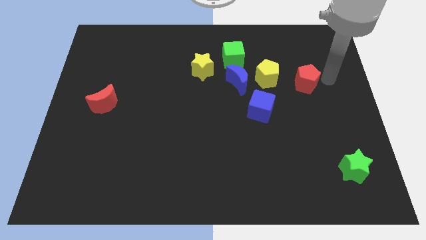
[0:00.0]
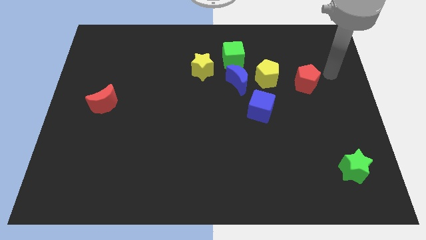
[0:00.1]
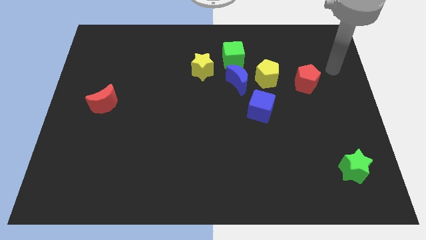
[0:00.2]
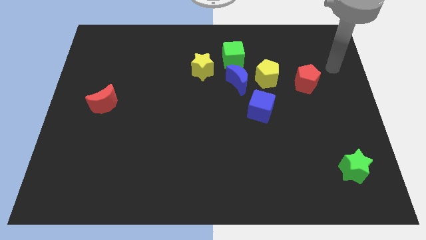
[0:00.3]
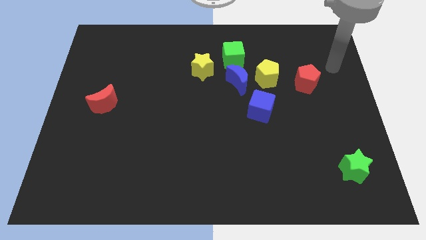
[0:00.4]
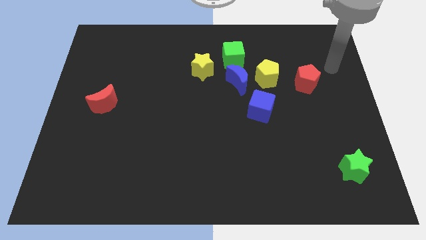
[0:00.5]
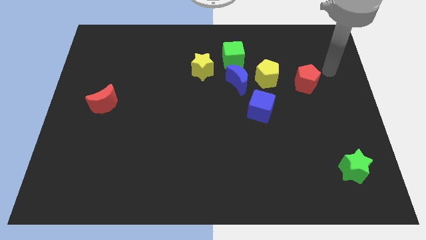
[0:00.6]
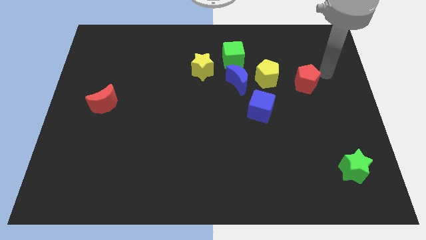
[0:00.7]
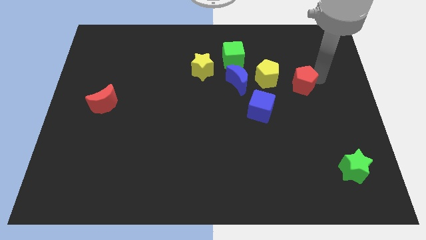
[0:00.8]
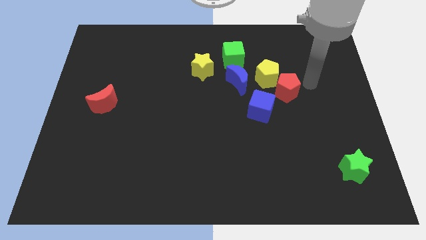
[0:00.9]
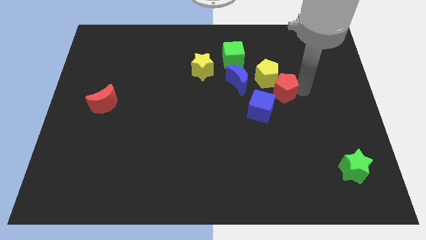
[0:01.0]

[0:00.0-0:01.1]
push the red pentagon into the right side of the yellow pentagon

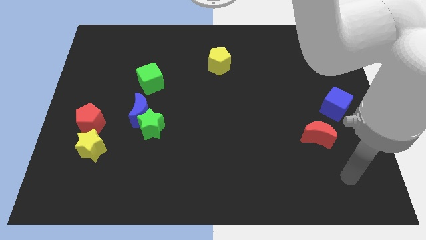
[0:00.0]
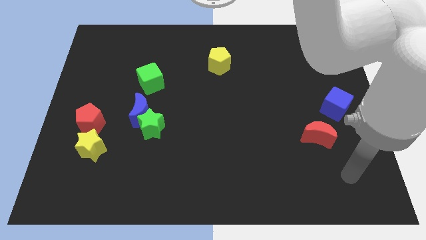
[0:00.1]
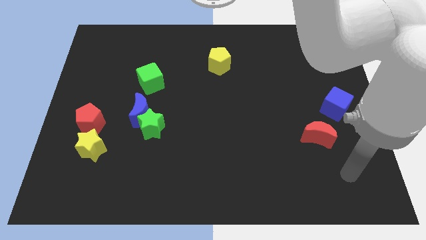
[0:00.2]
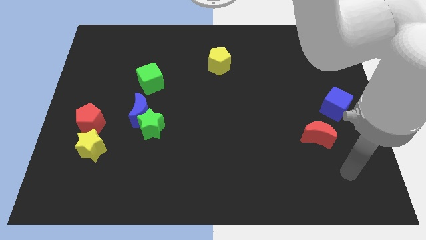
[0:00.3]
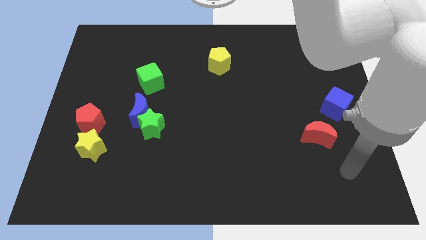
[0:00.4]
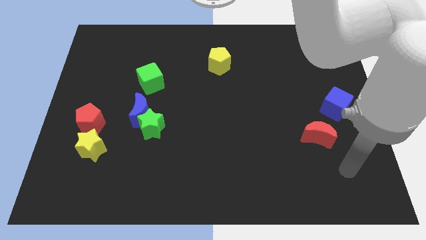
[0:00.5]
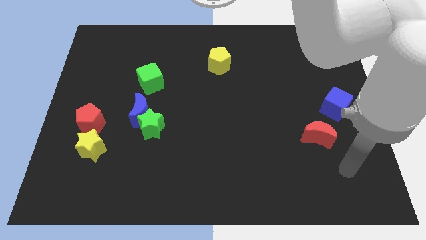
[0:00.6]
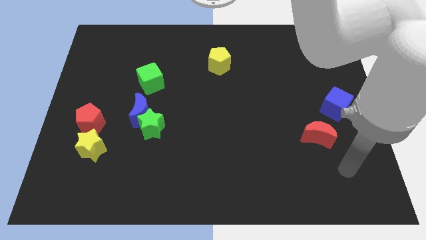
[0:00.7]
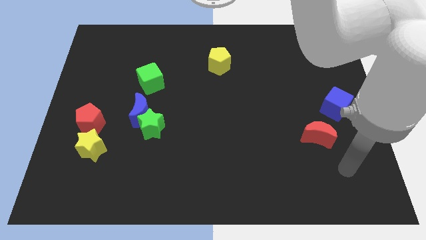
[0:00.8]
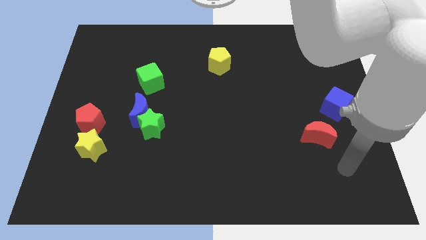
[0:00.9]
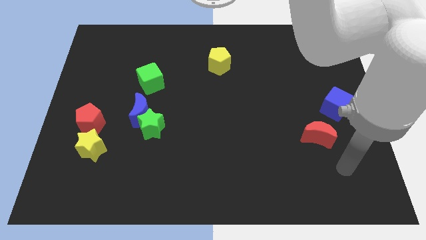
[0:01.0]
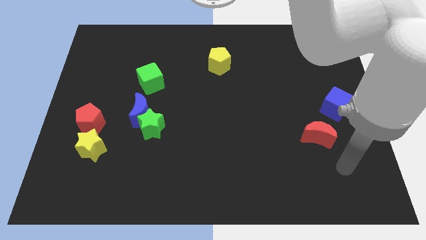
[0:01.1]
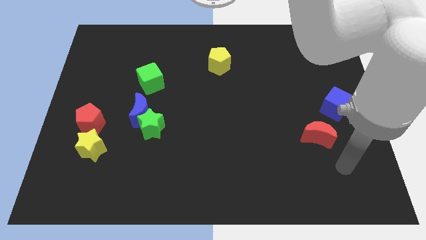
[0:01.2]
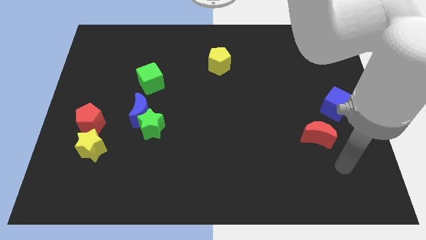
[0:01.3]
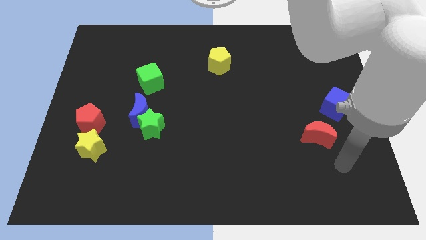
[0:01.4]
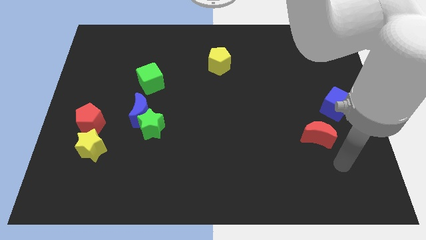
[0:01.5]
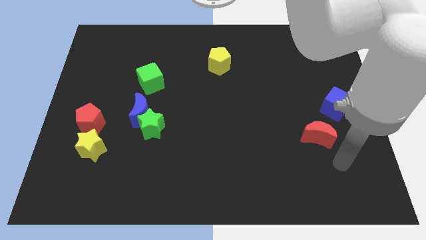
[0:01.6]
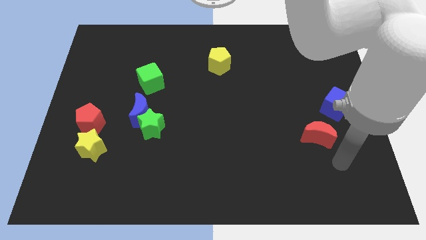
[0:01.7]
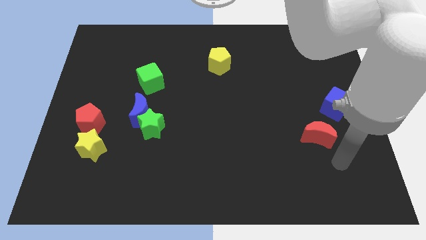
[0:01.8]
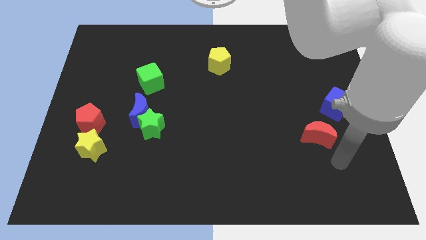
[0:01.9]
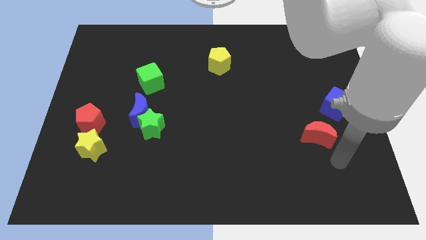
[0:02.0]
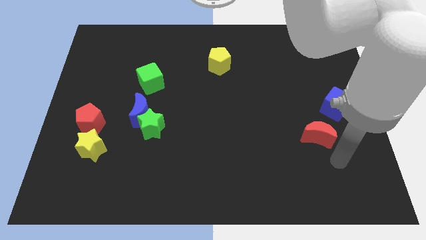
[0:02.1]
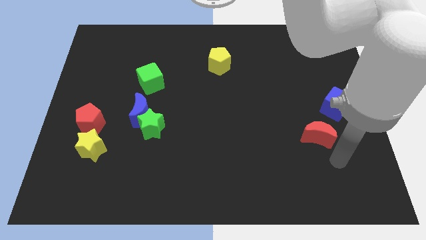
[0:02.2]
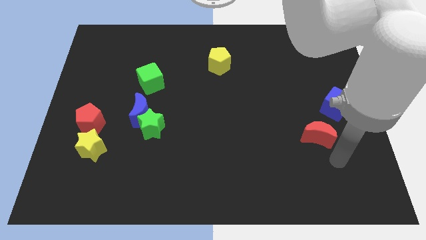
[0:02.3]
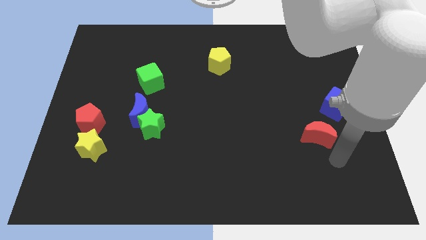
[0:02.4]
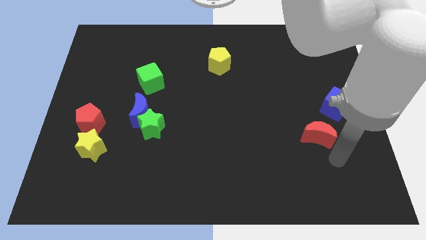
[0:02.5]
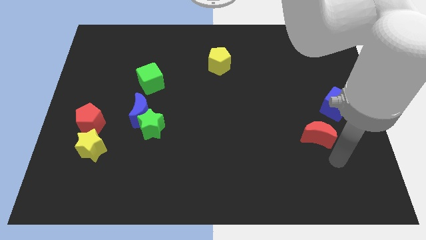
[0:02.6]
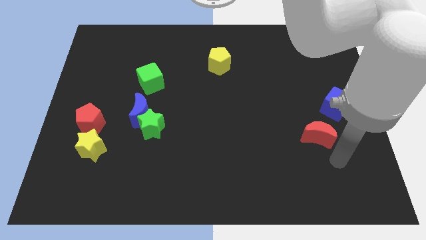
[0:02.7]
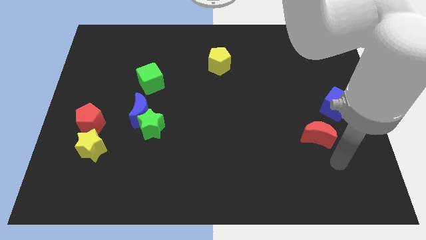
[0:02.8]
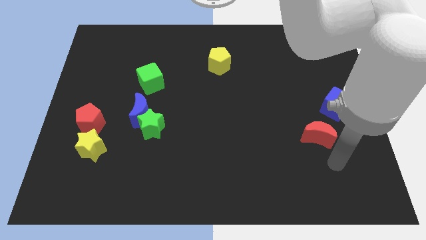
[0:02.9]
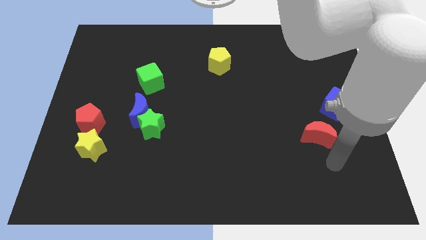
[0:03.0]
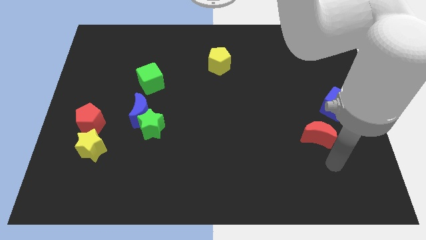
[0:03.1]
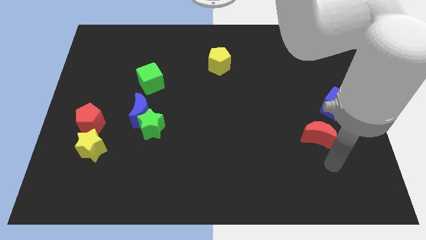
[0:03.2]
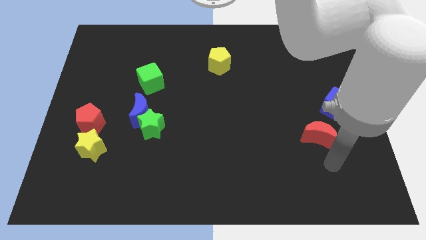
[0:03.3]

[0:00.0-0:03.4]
point your arm at the bottom of the red crescent

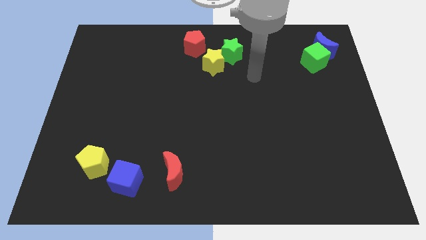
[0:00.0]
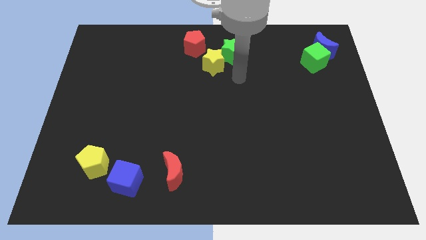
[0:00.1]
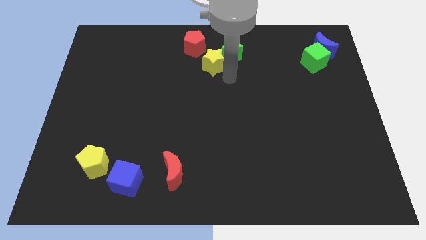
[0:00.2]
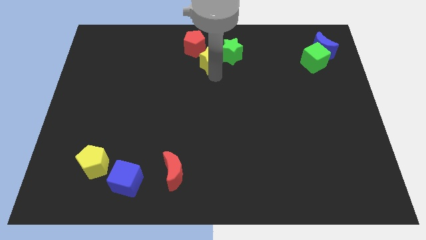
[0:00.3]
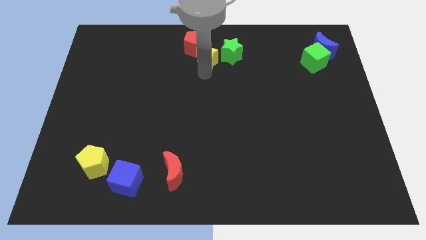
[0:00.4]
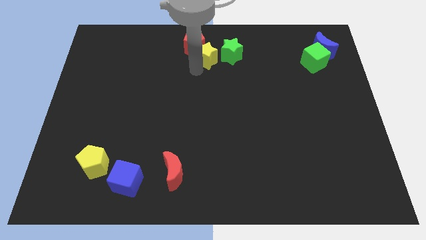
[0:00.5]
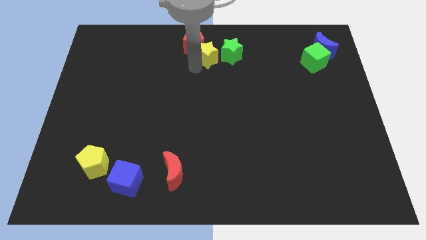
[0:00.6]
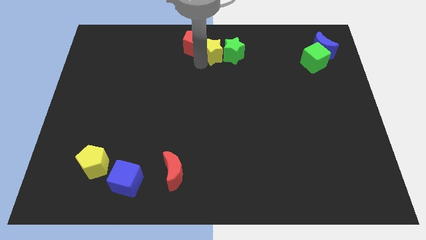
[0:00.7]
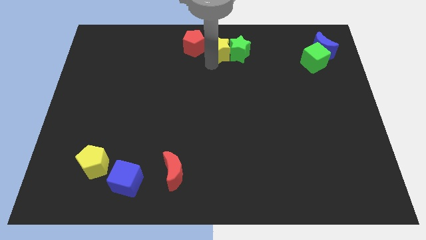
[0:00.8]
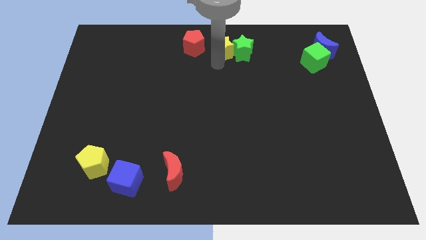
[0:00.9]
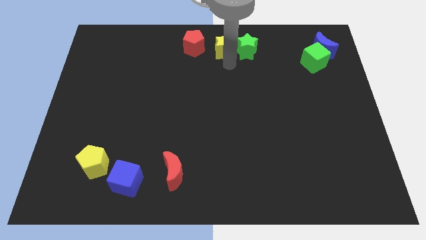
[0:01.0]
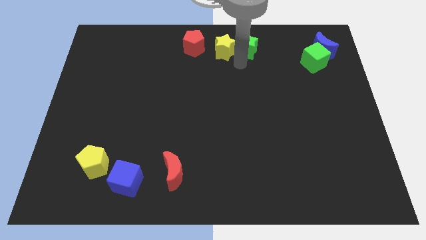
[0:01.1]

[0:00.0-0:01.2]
place yellow star to the left of the green star

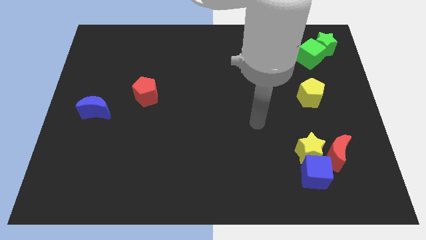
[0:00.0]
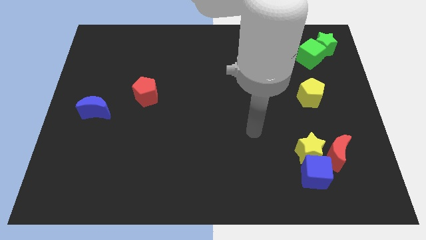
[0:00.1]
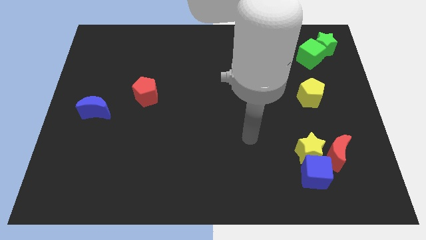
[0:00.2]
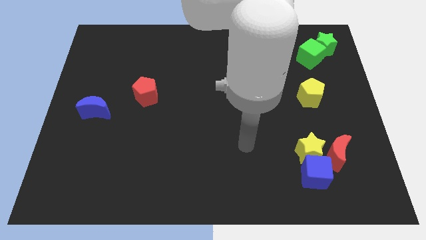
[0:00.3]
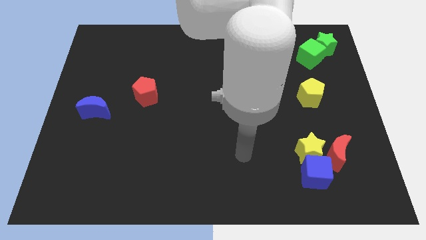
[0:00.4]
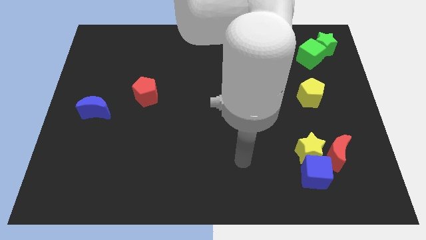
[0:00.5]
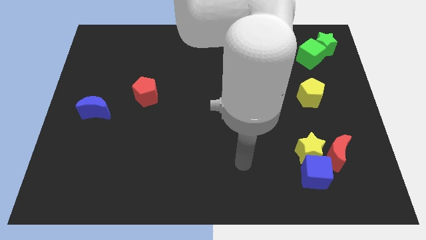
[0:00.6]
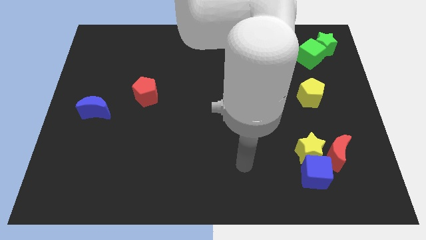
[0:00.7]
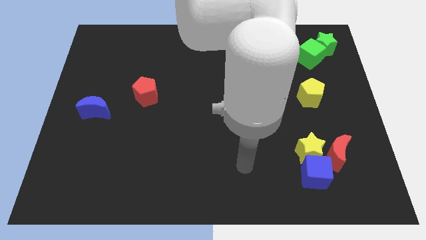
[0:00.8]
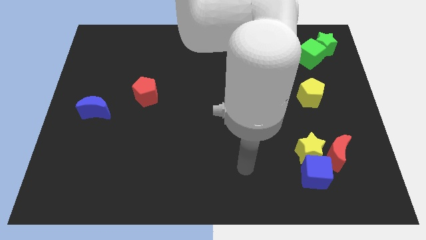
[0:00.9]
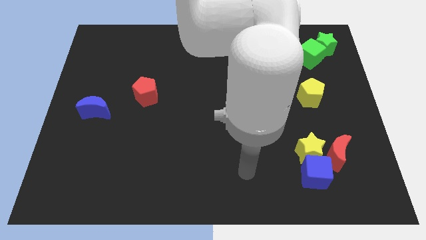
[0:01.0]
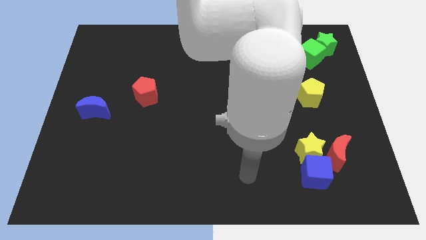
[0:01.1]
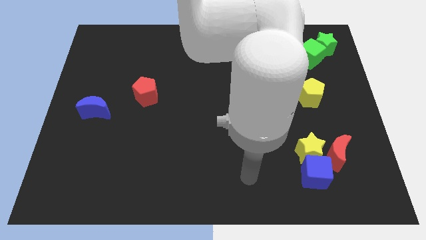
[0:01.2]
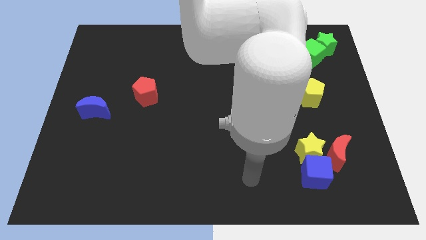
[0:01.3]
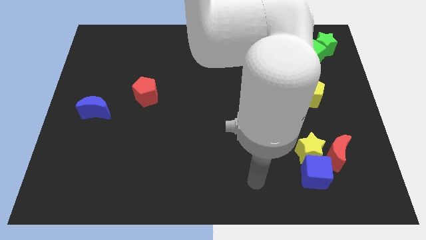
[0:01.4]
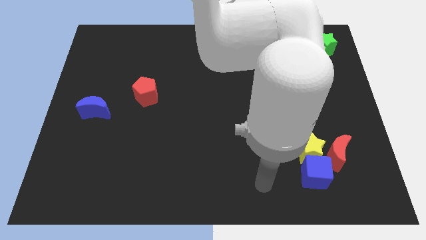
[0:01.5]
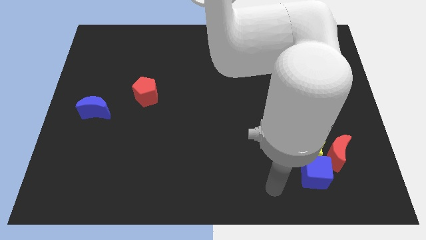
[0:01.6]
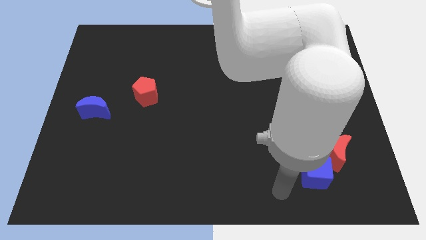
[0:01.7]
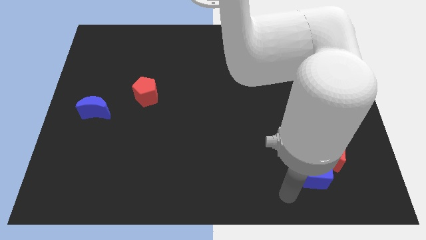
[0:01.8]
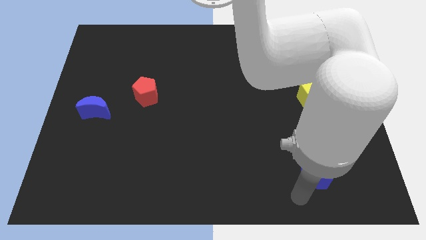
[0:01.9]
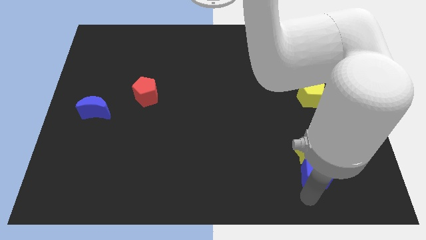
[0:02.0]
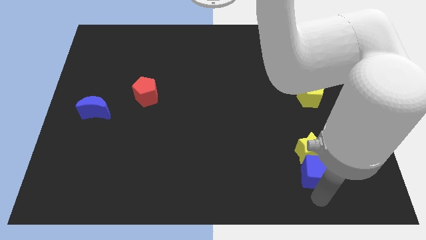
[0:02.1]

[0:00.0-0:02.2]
move your arm towards the blue cube

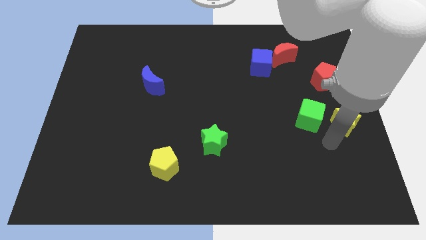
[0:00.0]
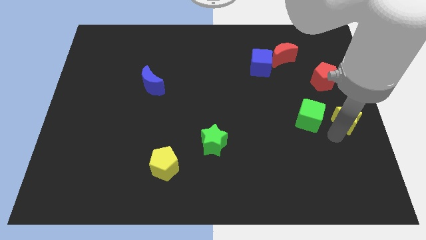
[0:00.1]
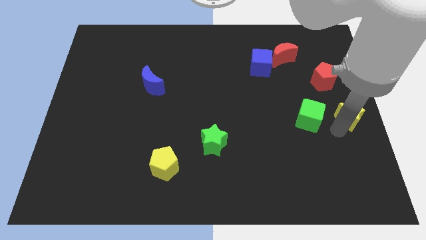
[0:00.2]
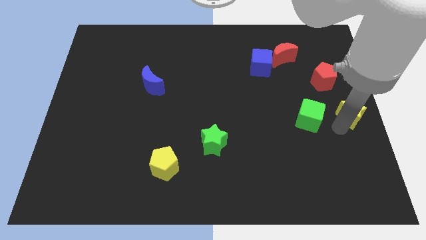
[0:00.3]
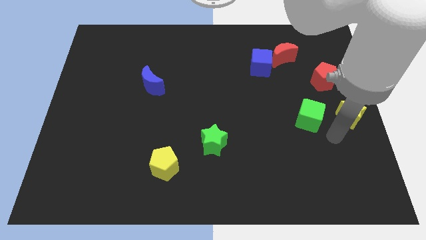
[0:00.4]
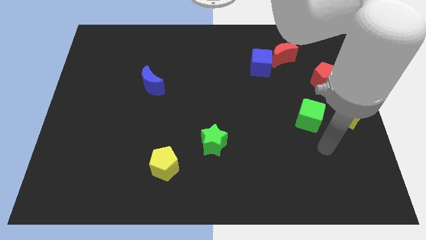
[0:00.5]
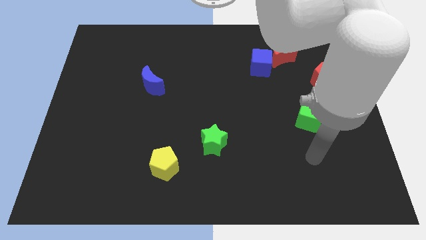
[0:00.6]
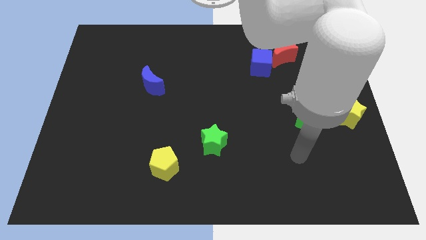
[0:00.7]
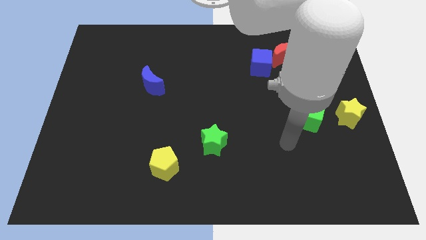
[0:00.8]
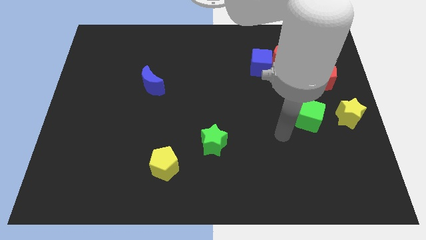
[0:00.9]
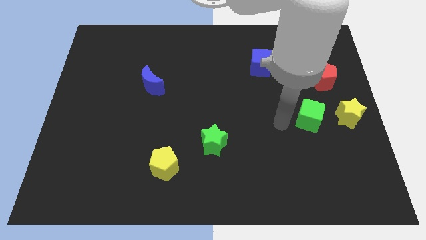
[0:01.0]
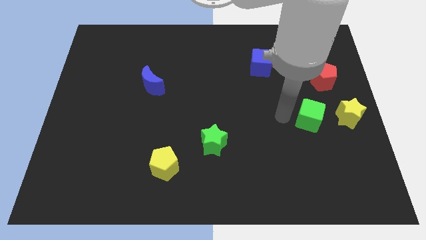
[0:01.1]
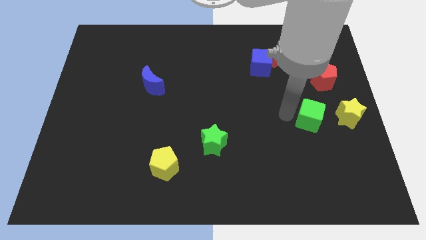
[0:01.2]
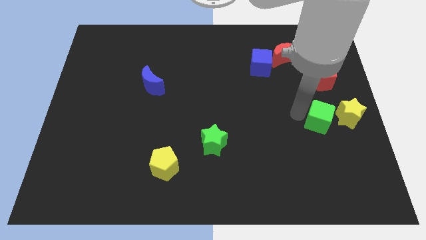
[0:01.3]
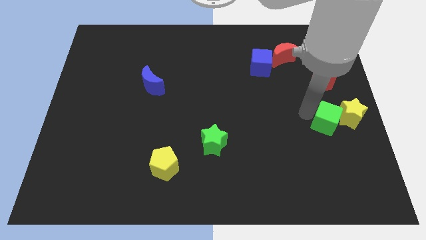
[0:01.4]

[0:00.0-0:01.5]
push the green cube into the yellow star
